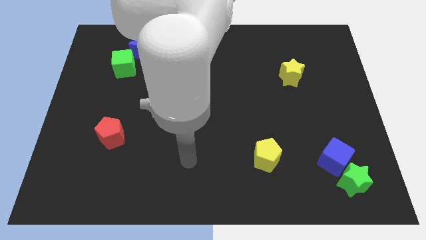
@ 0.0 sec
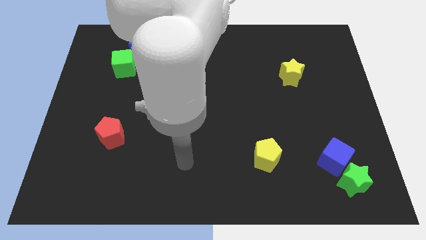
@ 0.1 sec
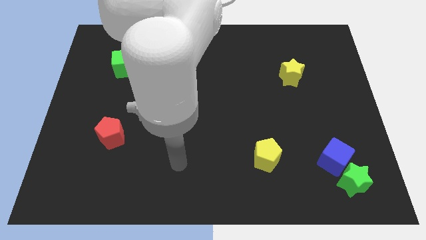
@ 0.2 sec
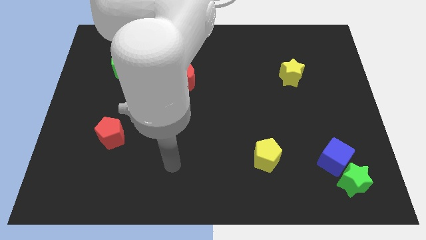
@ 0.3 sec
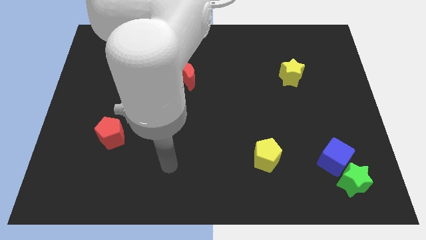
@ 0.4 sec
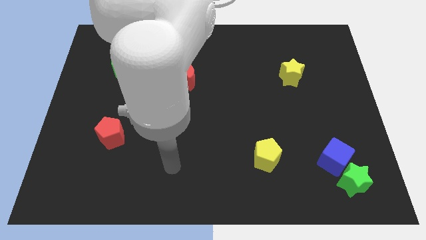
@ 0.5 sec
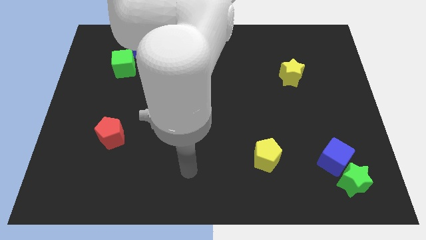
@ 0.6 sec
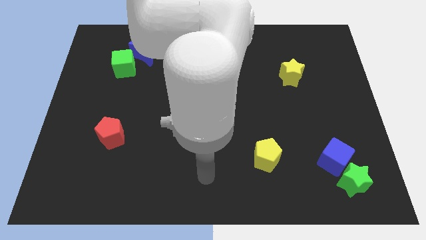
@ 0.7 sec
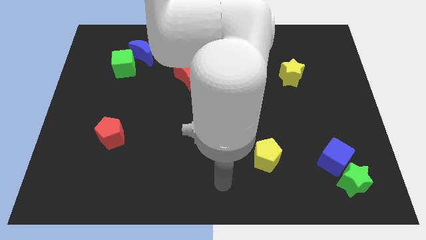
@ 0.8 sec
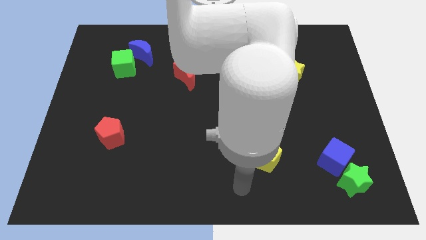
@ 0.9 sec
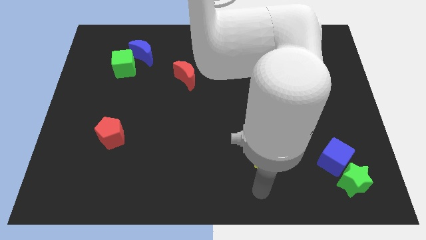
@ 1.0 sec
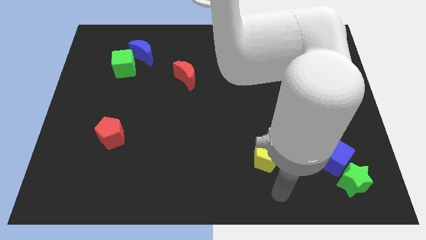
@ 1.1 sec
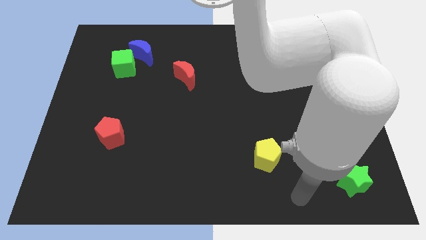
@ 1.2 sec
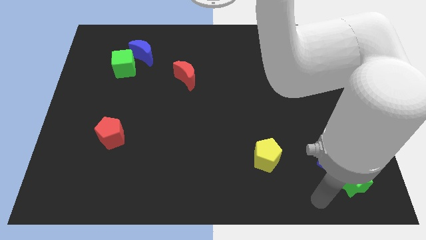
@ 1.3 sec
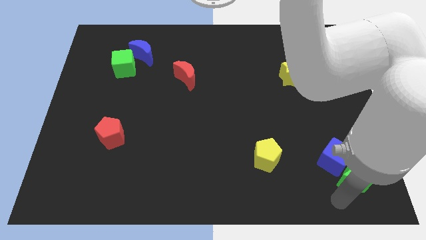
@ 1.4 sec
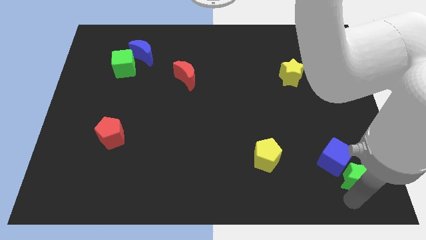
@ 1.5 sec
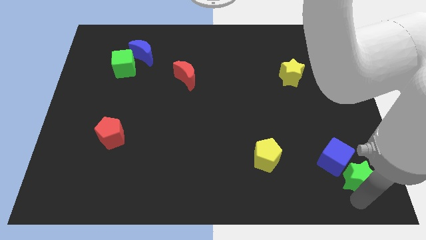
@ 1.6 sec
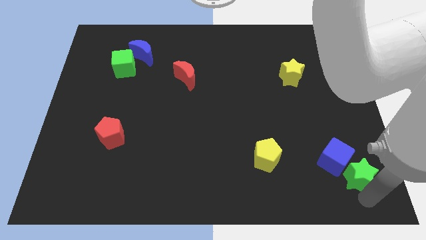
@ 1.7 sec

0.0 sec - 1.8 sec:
move your arm to the bottom of the green star

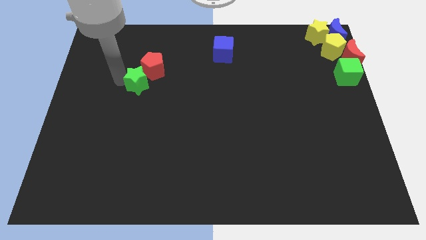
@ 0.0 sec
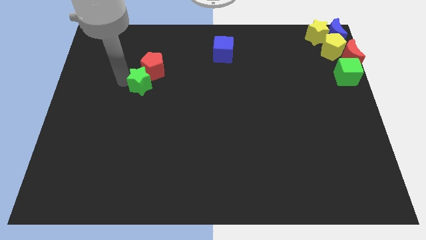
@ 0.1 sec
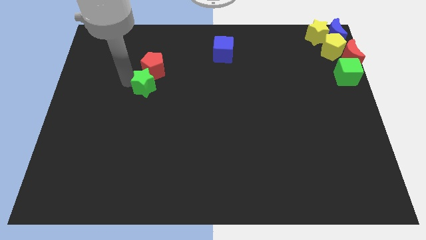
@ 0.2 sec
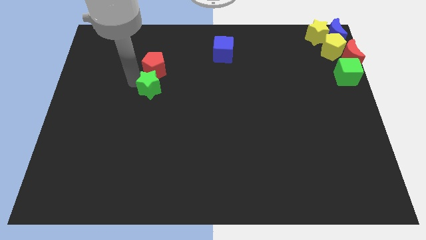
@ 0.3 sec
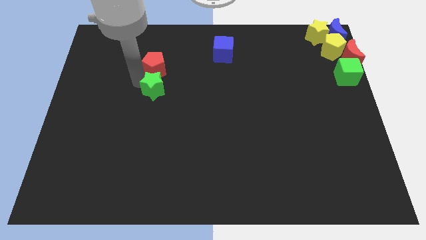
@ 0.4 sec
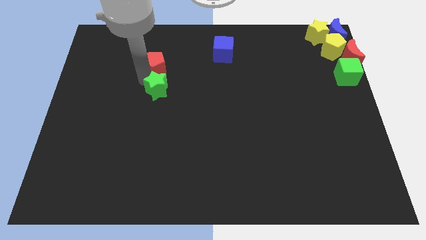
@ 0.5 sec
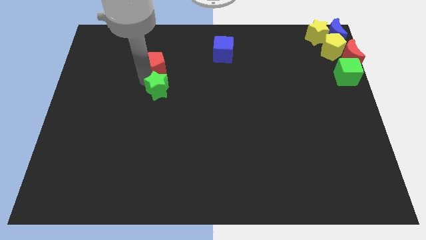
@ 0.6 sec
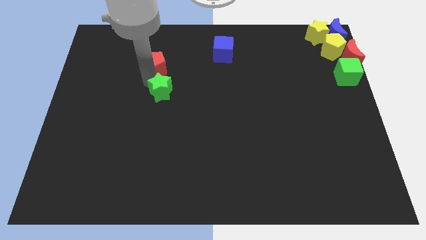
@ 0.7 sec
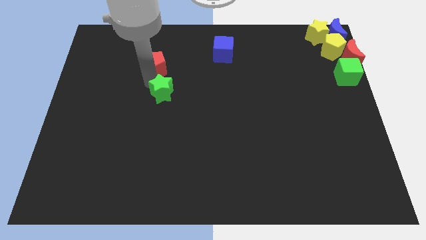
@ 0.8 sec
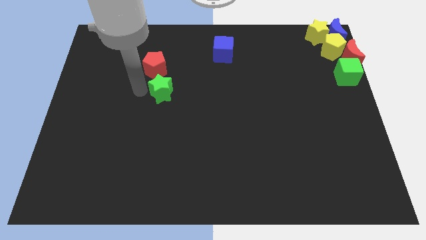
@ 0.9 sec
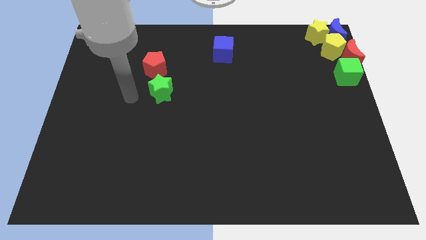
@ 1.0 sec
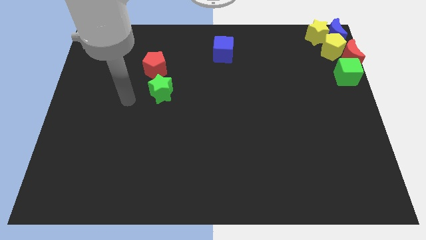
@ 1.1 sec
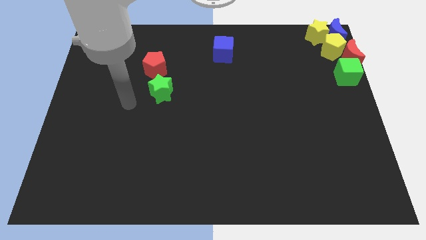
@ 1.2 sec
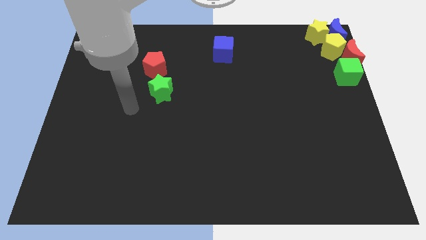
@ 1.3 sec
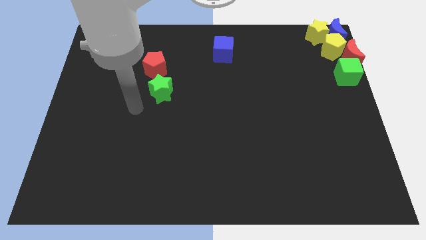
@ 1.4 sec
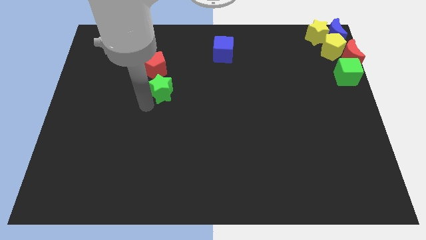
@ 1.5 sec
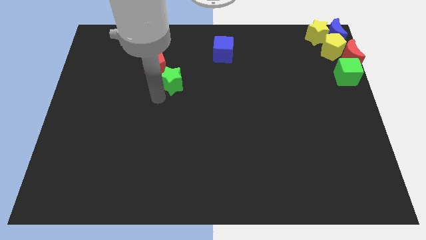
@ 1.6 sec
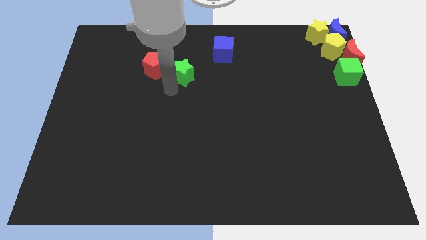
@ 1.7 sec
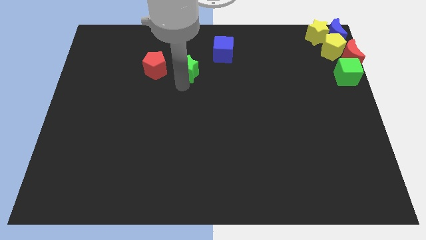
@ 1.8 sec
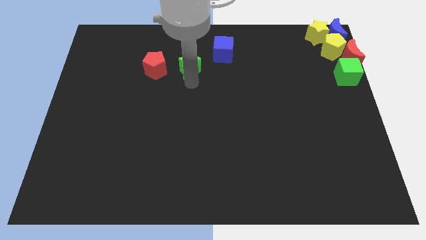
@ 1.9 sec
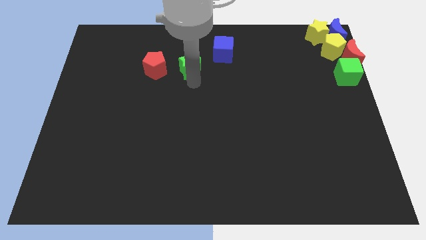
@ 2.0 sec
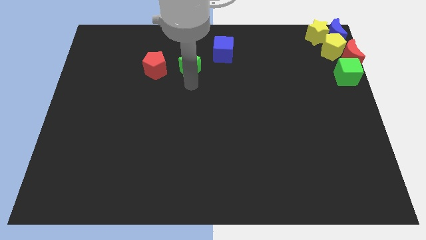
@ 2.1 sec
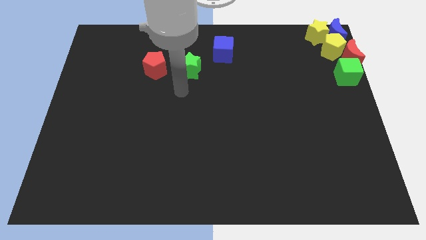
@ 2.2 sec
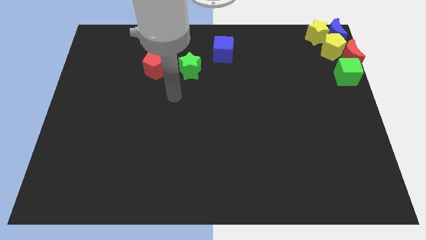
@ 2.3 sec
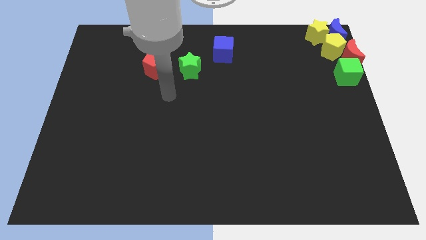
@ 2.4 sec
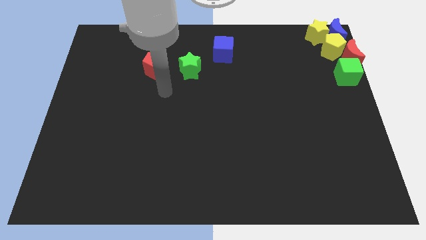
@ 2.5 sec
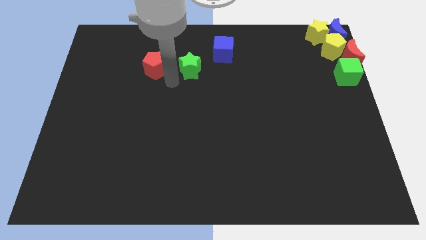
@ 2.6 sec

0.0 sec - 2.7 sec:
place the green star to the right of the red pentagon

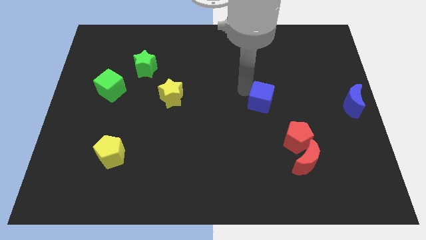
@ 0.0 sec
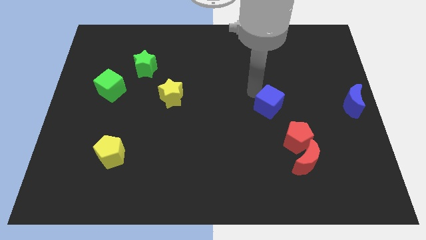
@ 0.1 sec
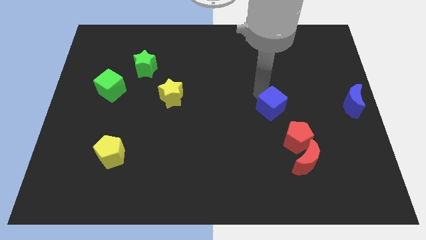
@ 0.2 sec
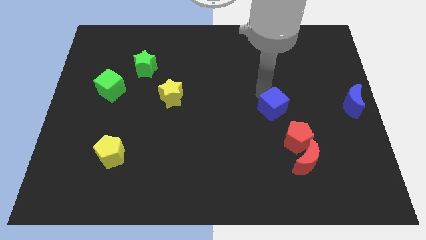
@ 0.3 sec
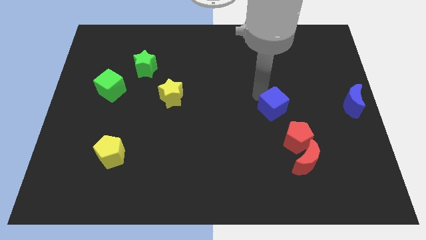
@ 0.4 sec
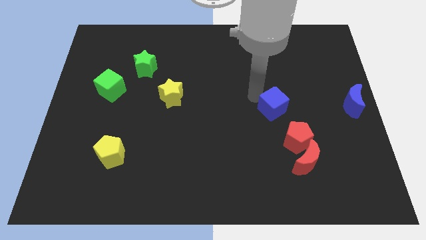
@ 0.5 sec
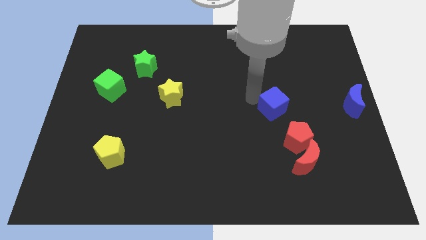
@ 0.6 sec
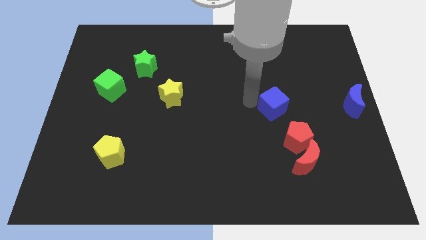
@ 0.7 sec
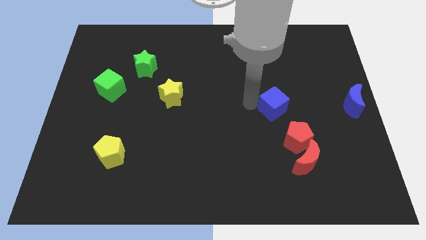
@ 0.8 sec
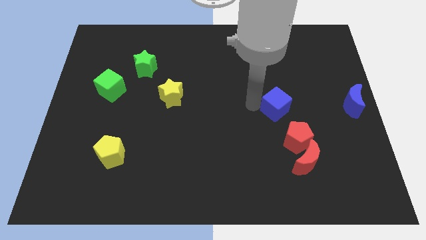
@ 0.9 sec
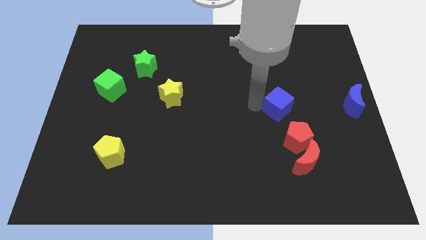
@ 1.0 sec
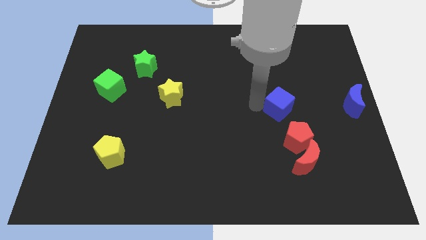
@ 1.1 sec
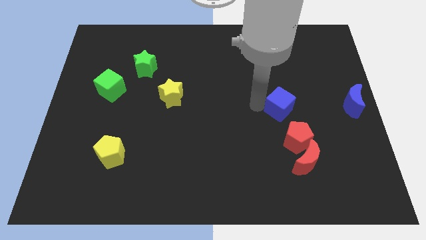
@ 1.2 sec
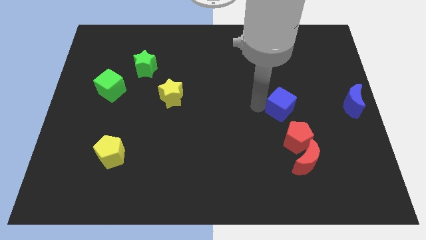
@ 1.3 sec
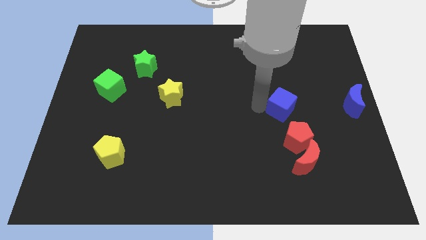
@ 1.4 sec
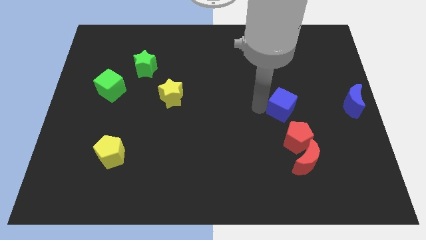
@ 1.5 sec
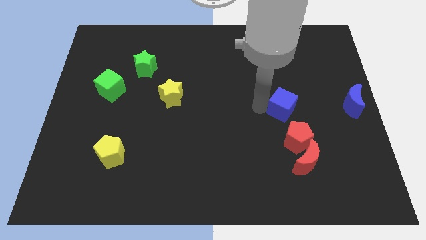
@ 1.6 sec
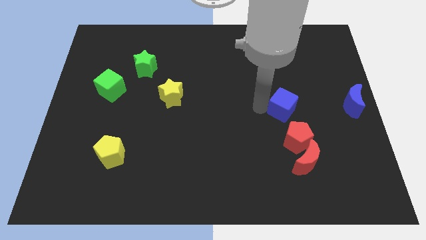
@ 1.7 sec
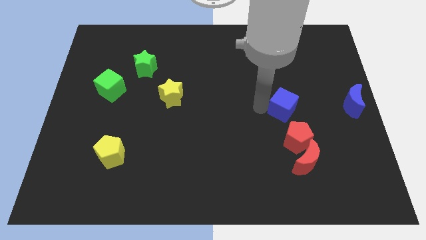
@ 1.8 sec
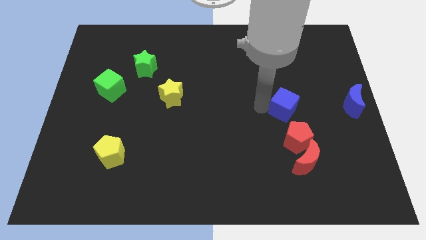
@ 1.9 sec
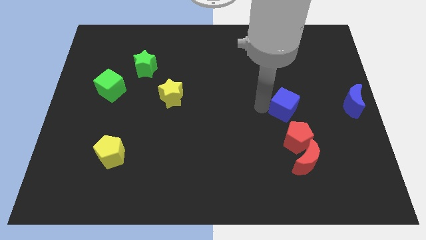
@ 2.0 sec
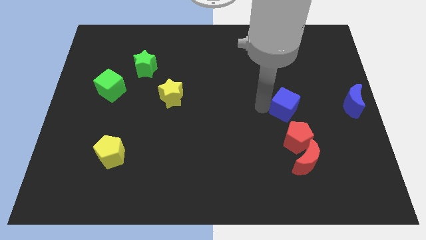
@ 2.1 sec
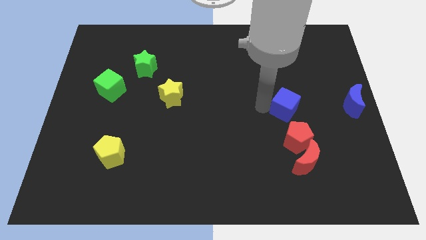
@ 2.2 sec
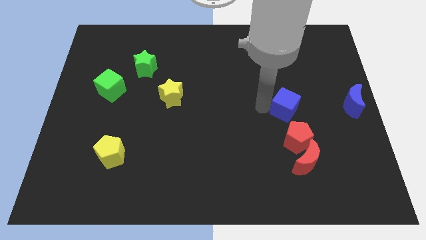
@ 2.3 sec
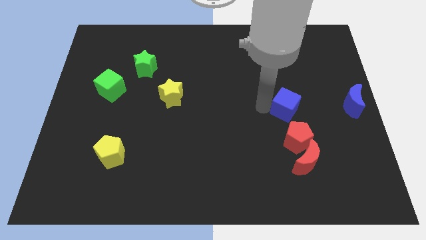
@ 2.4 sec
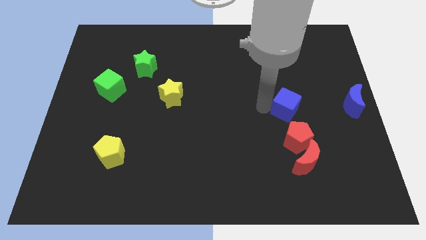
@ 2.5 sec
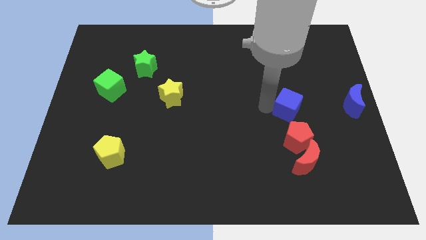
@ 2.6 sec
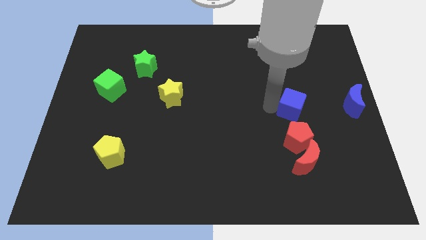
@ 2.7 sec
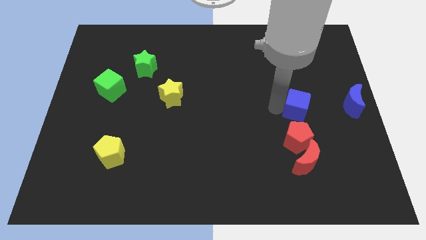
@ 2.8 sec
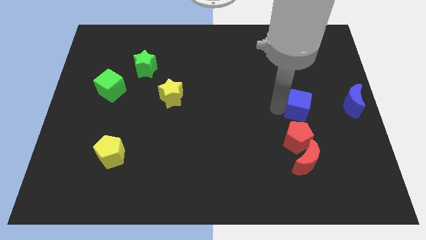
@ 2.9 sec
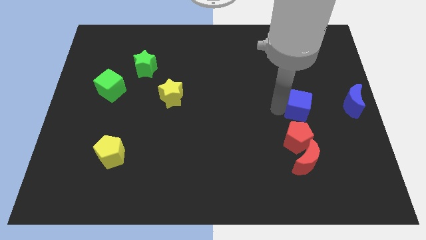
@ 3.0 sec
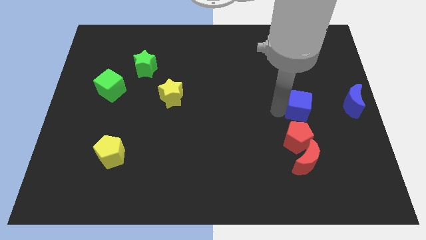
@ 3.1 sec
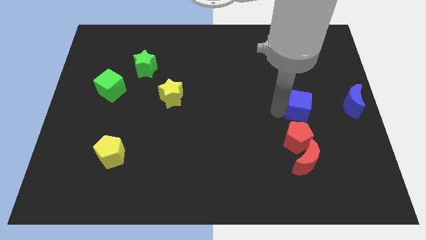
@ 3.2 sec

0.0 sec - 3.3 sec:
push the blue cube above the red pentagon

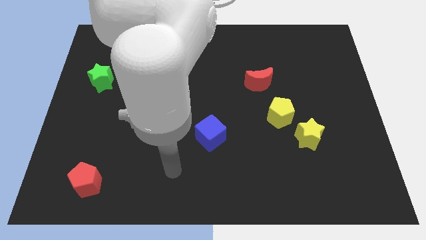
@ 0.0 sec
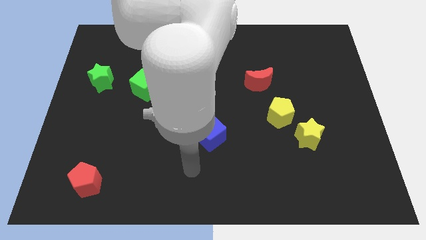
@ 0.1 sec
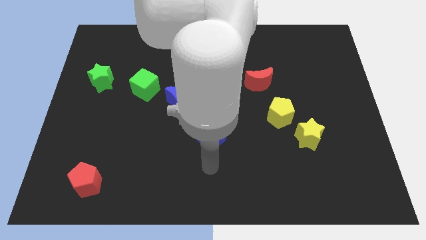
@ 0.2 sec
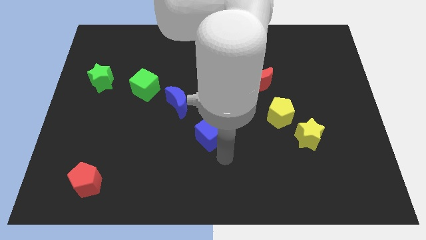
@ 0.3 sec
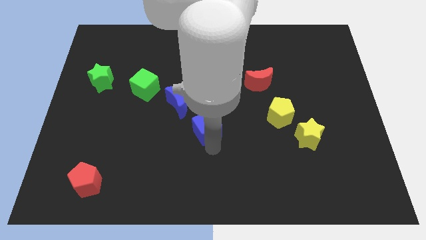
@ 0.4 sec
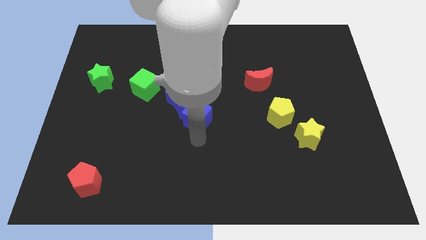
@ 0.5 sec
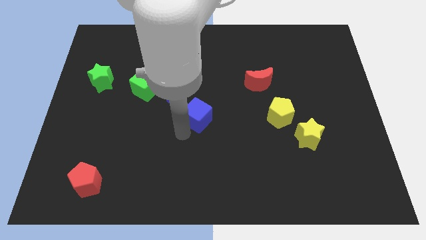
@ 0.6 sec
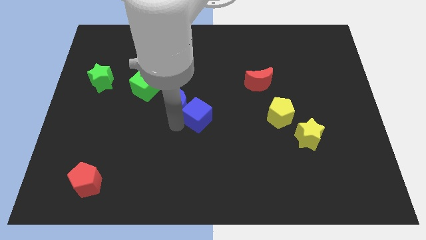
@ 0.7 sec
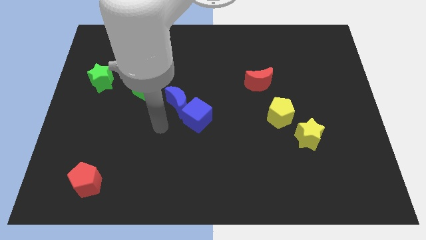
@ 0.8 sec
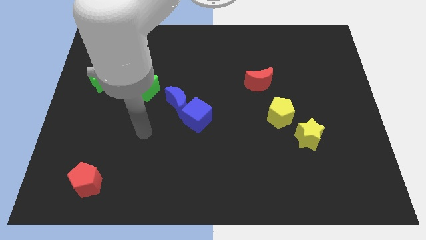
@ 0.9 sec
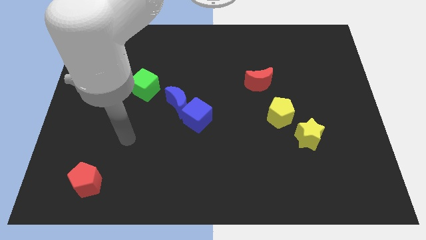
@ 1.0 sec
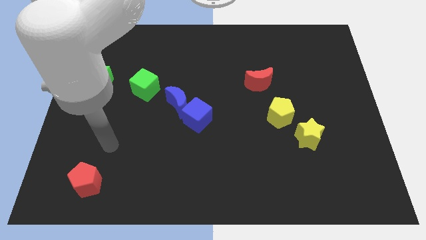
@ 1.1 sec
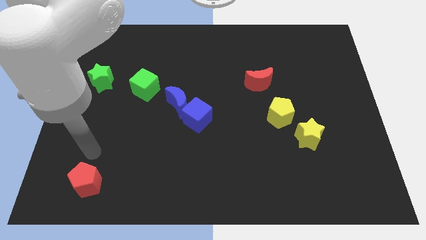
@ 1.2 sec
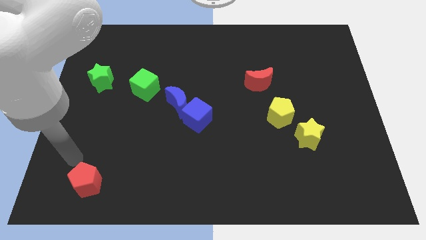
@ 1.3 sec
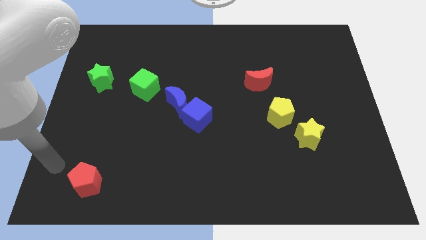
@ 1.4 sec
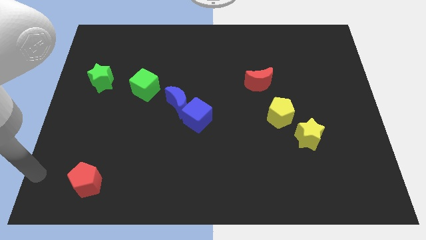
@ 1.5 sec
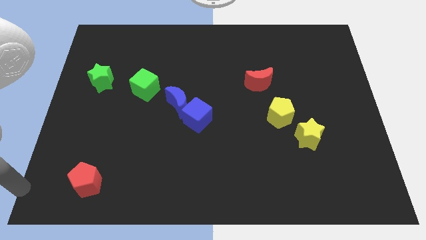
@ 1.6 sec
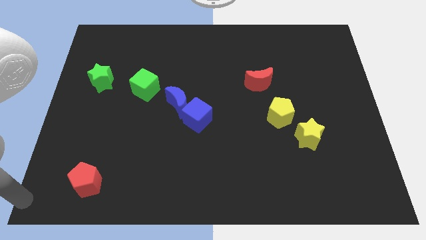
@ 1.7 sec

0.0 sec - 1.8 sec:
push the blue cube into the blue moon
